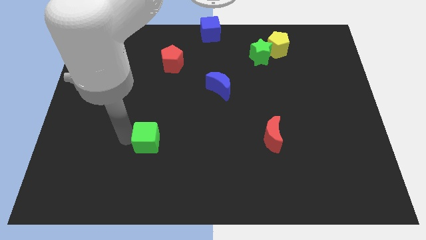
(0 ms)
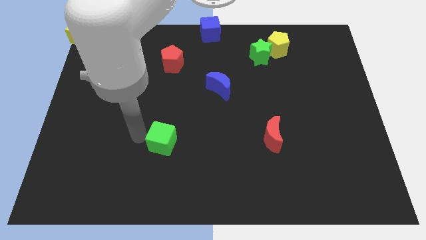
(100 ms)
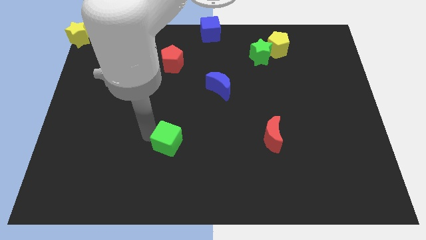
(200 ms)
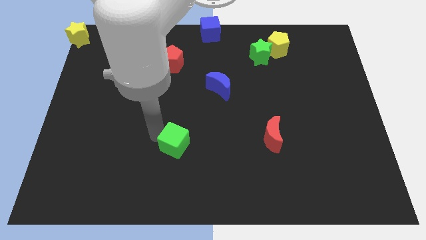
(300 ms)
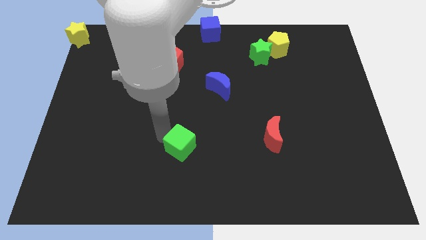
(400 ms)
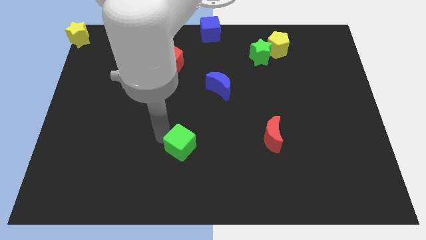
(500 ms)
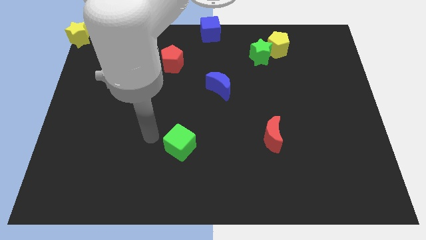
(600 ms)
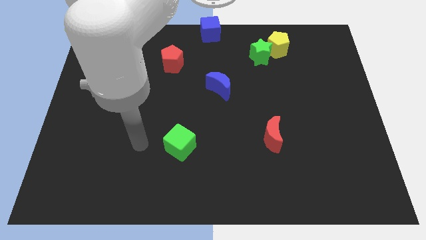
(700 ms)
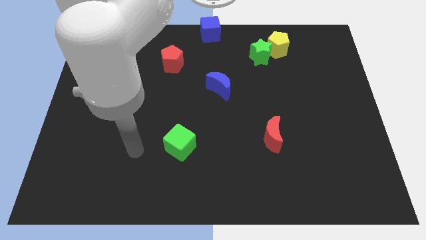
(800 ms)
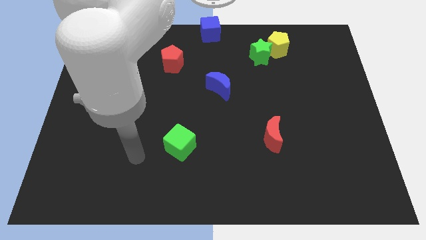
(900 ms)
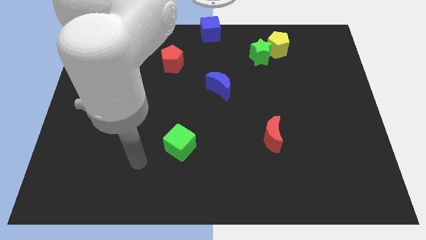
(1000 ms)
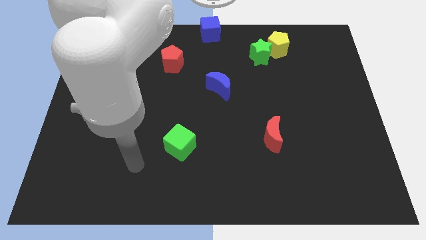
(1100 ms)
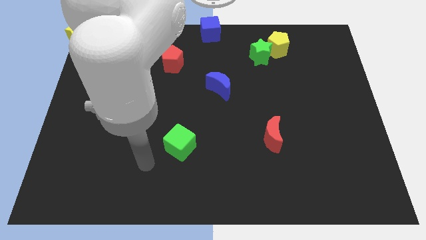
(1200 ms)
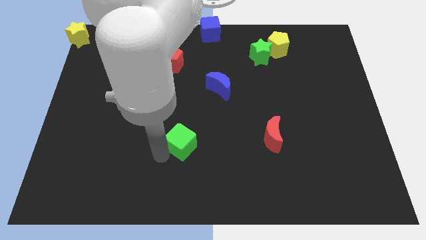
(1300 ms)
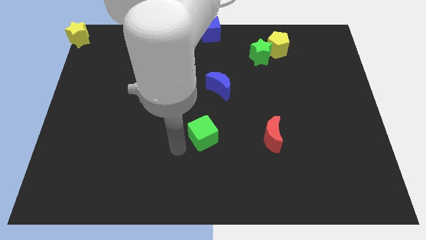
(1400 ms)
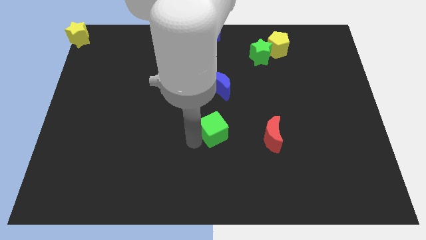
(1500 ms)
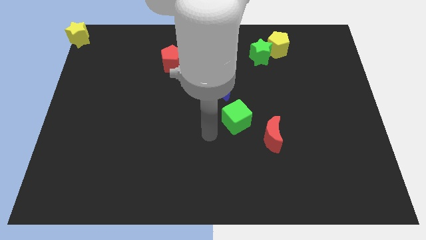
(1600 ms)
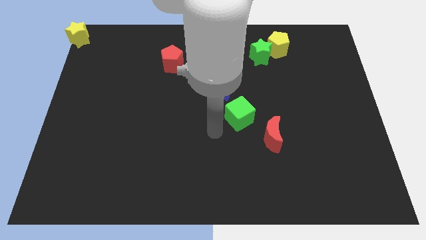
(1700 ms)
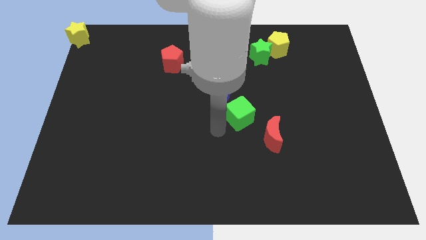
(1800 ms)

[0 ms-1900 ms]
put the green cube between the red moon and blue moon

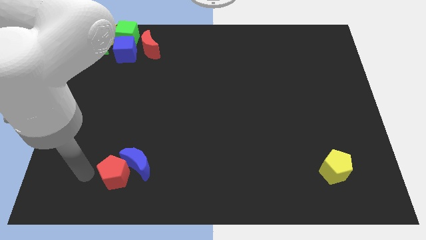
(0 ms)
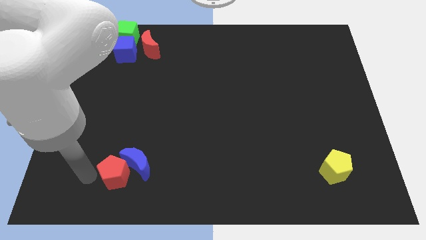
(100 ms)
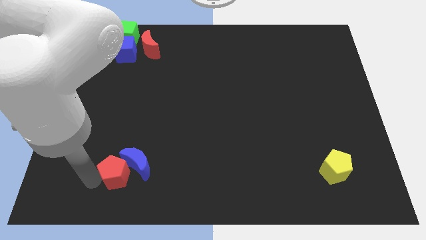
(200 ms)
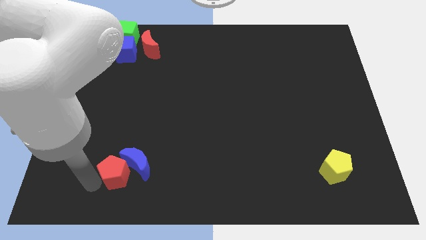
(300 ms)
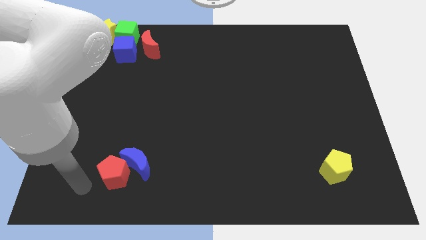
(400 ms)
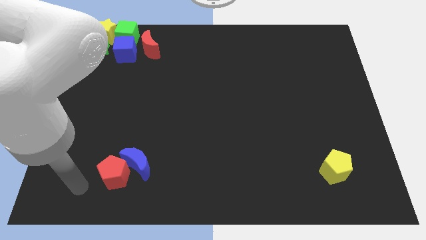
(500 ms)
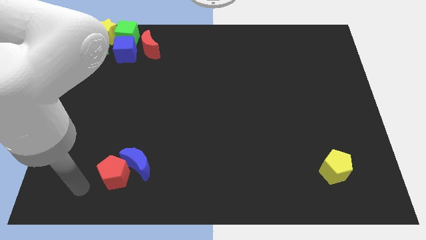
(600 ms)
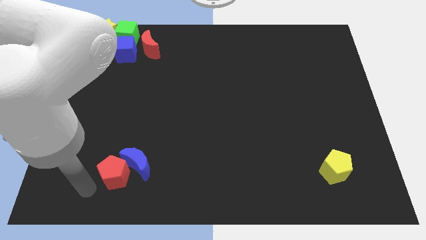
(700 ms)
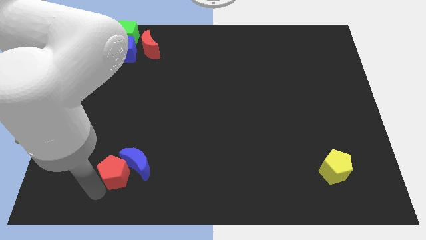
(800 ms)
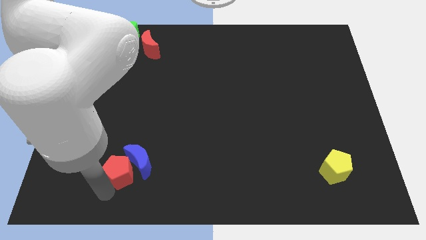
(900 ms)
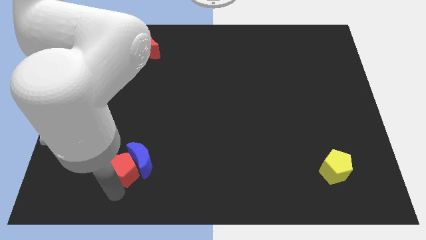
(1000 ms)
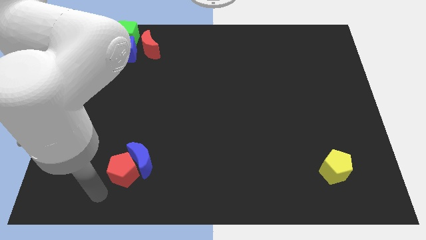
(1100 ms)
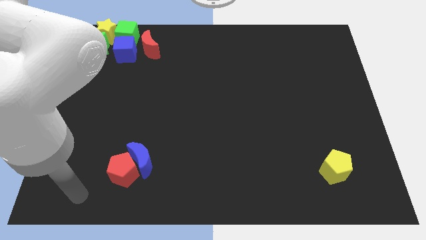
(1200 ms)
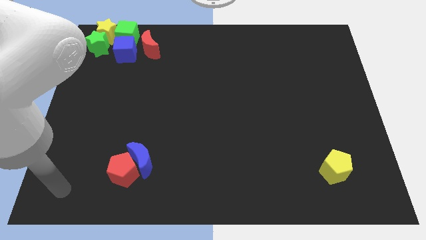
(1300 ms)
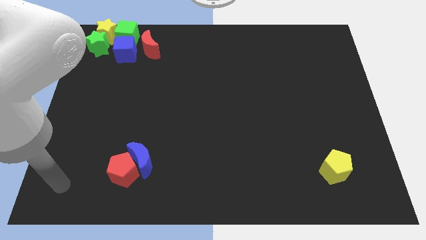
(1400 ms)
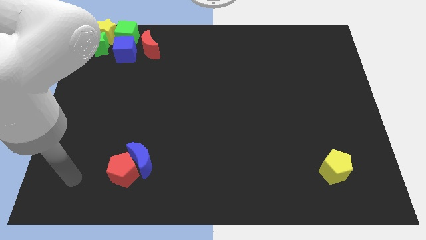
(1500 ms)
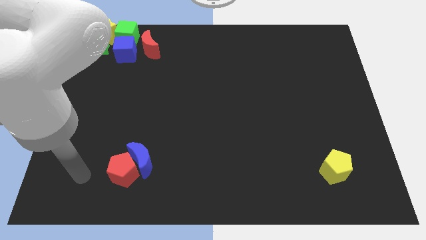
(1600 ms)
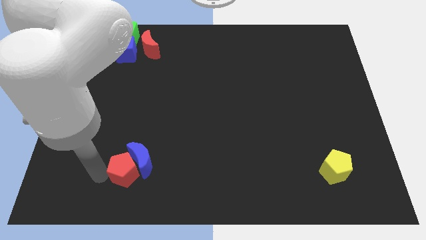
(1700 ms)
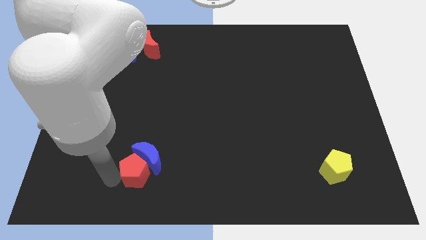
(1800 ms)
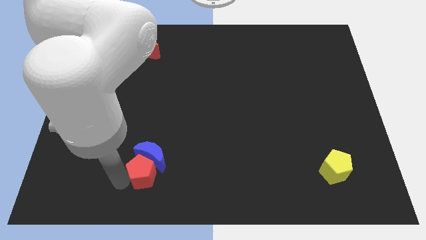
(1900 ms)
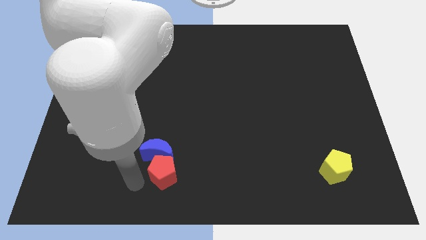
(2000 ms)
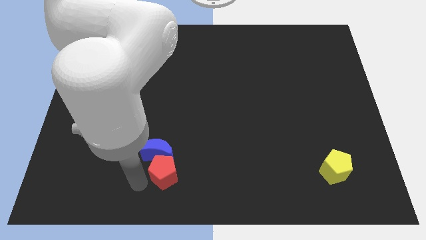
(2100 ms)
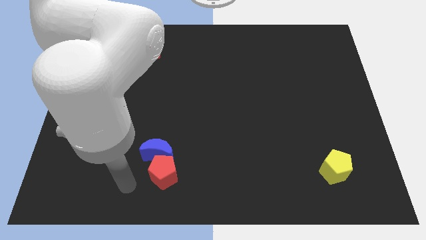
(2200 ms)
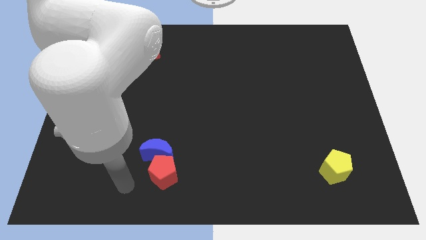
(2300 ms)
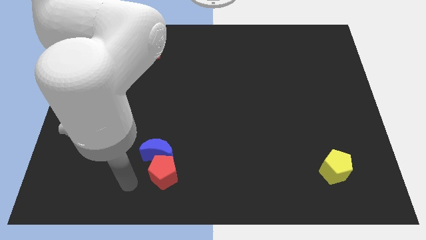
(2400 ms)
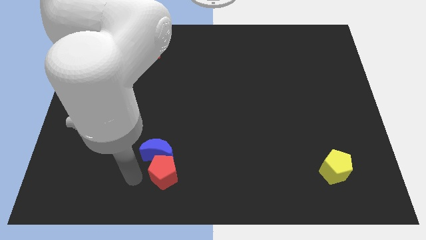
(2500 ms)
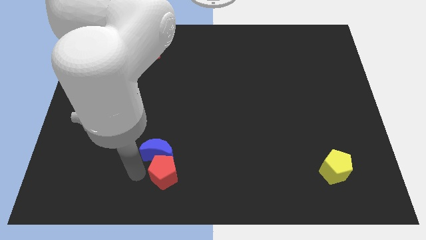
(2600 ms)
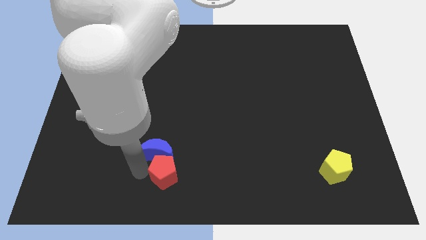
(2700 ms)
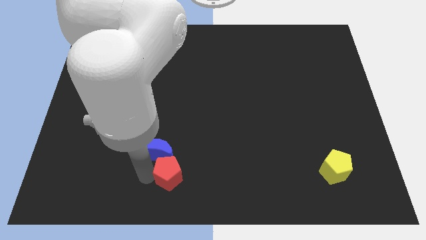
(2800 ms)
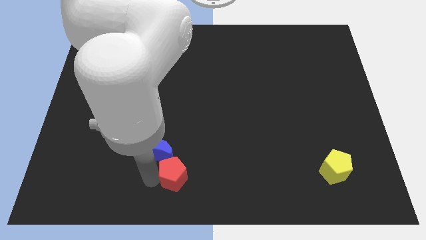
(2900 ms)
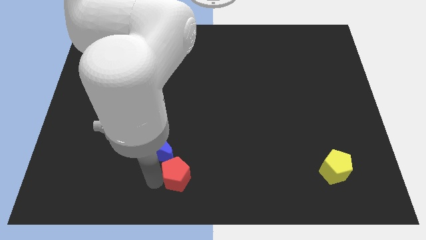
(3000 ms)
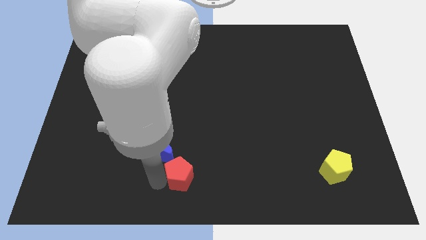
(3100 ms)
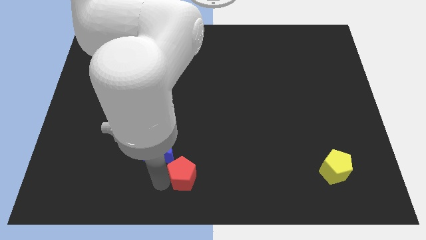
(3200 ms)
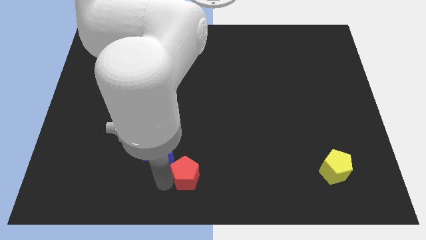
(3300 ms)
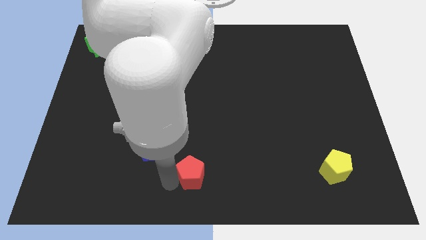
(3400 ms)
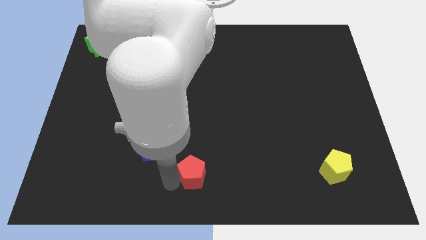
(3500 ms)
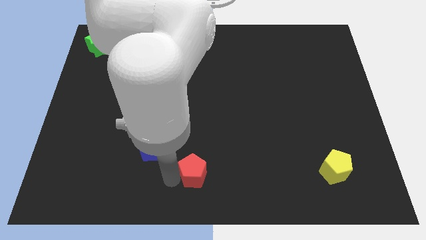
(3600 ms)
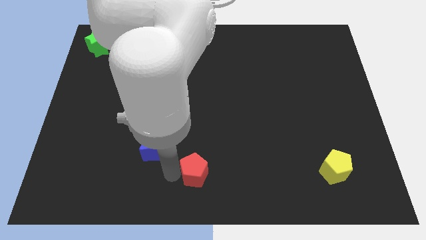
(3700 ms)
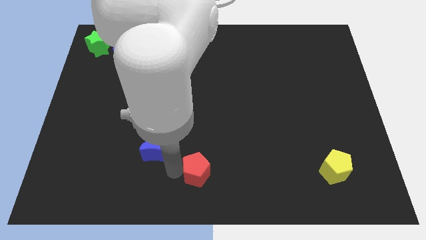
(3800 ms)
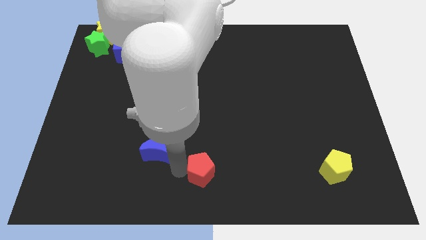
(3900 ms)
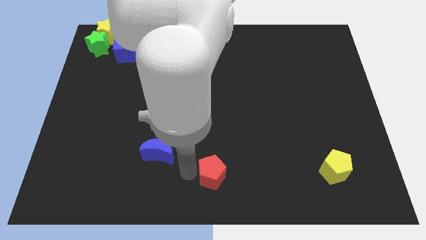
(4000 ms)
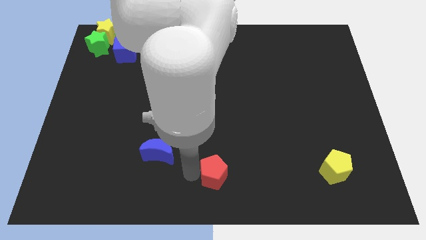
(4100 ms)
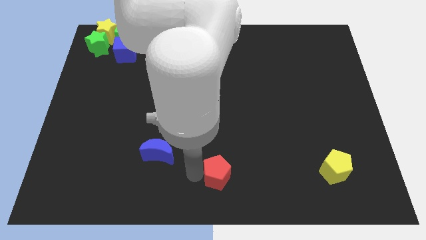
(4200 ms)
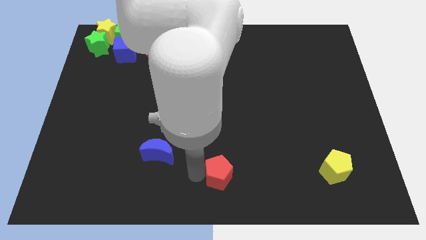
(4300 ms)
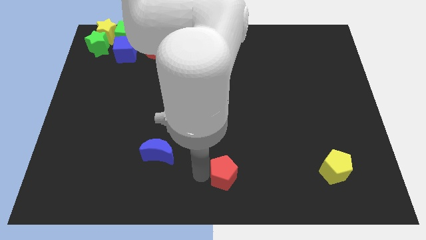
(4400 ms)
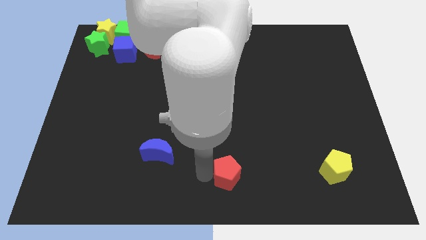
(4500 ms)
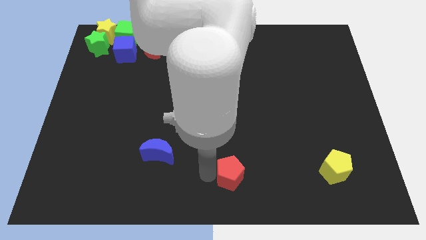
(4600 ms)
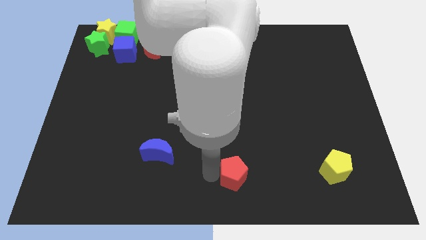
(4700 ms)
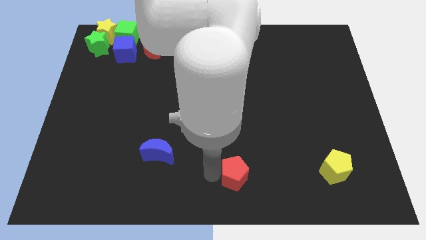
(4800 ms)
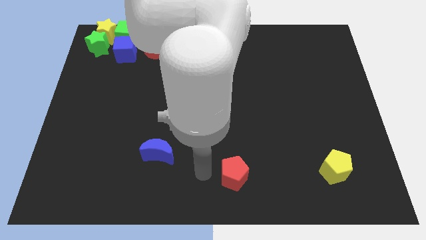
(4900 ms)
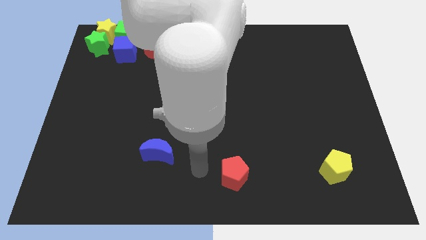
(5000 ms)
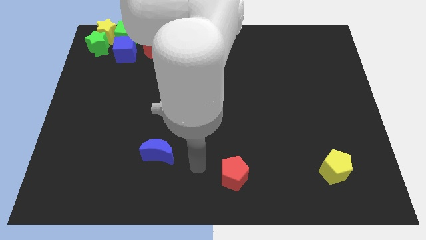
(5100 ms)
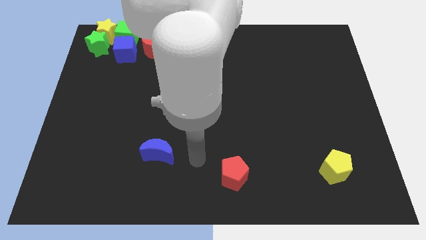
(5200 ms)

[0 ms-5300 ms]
push the red pentagon to the bottom center of the board

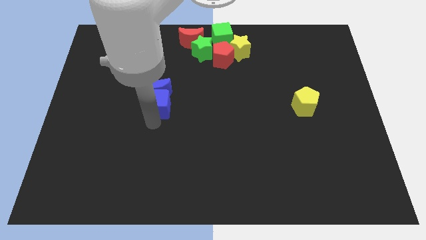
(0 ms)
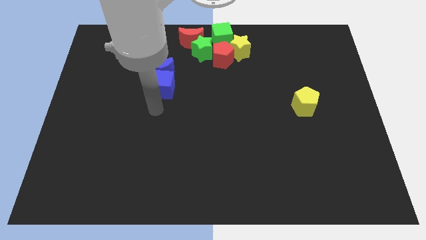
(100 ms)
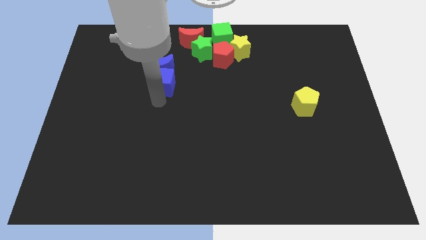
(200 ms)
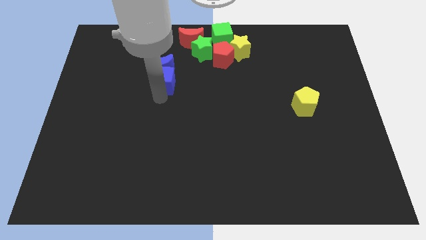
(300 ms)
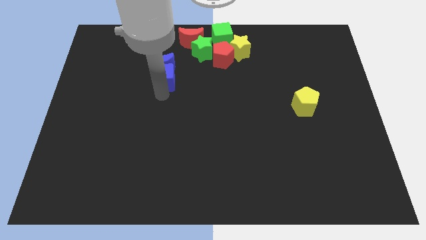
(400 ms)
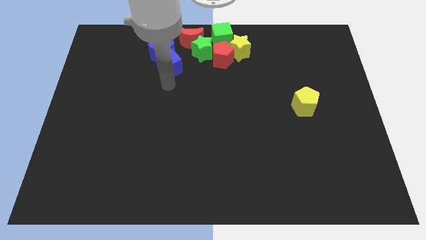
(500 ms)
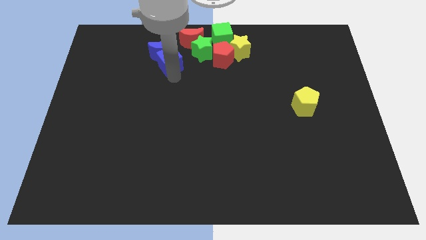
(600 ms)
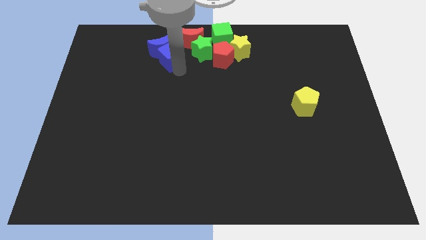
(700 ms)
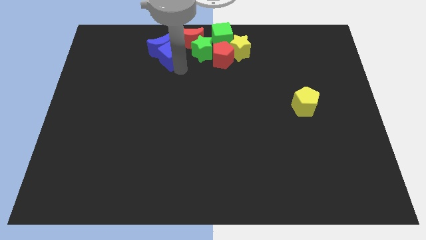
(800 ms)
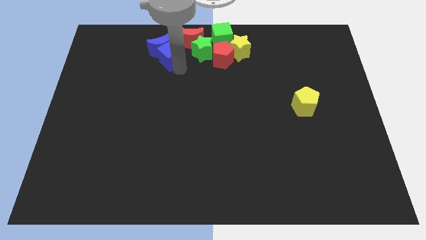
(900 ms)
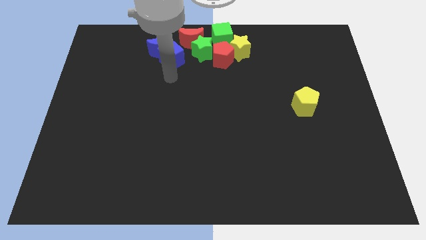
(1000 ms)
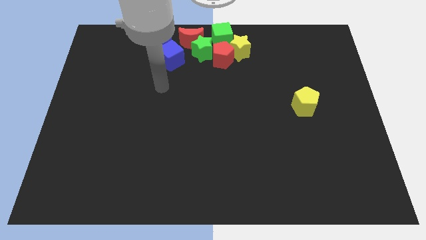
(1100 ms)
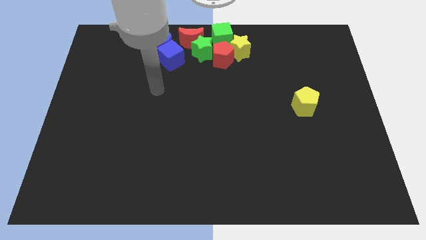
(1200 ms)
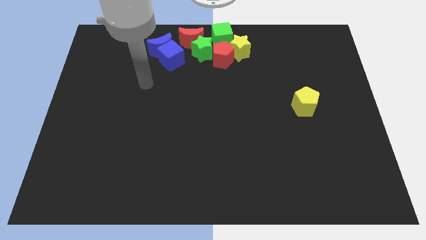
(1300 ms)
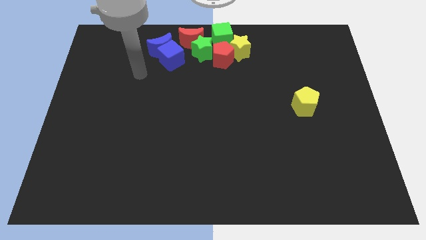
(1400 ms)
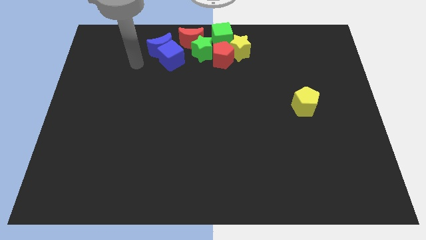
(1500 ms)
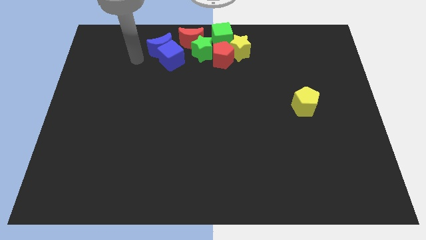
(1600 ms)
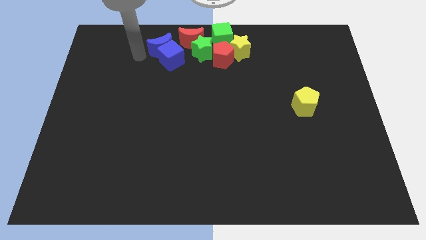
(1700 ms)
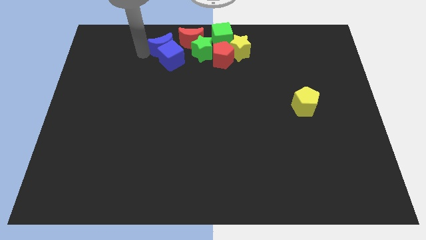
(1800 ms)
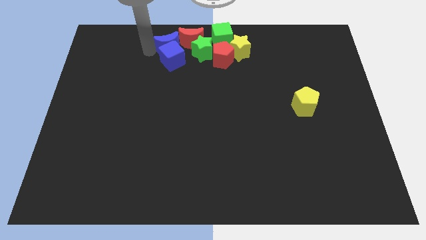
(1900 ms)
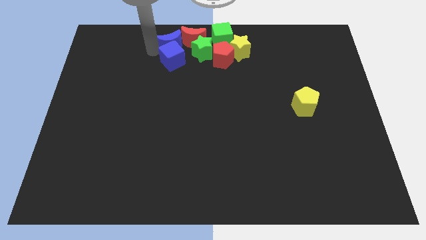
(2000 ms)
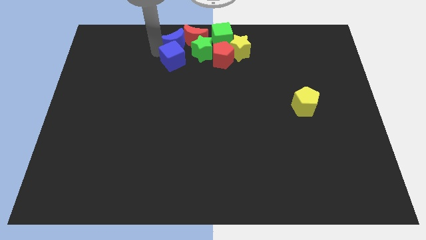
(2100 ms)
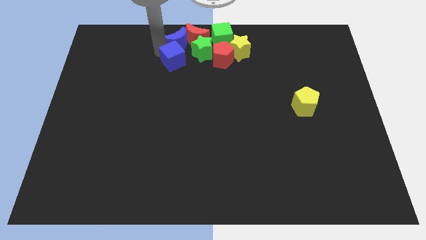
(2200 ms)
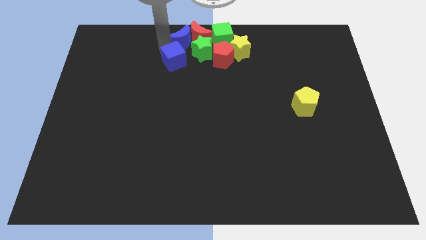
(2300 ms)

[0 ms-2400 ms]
place the blue moon left to the red moon
